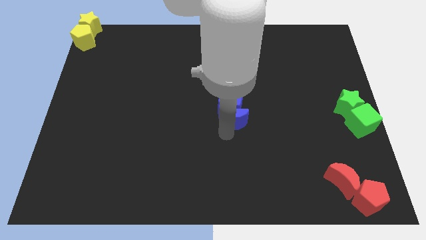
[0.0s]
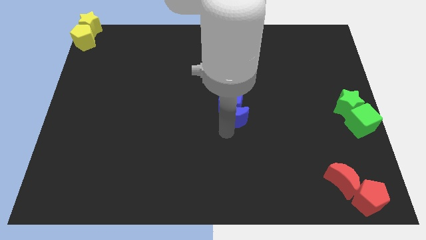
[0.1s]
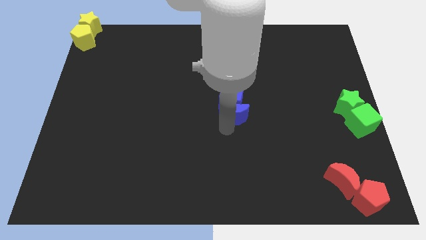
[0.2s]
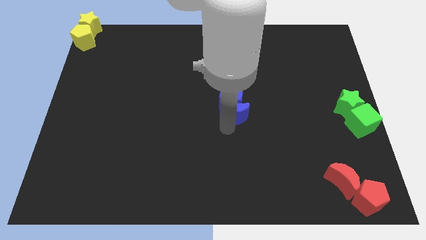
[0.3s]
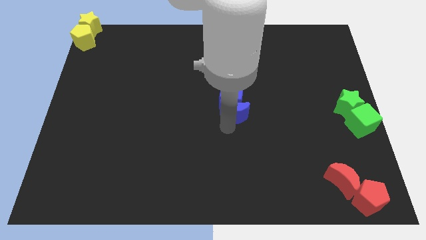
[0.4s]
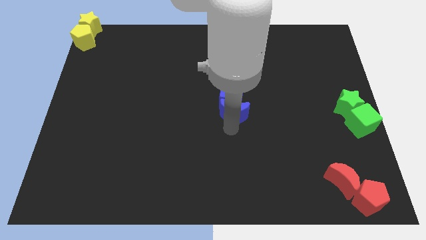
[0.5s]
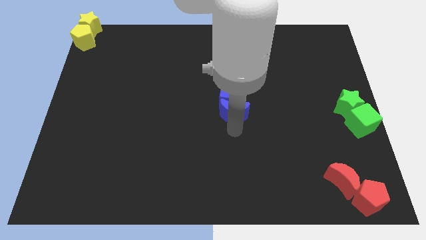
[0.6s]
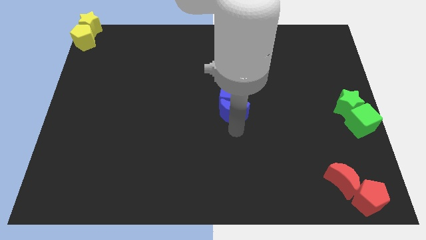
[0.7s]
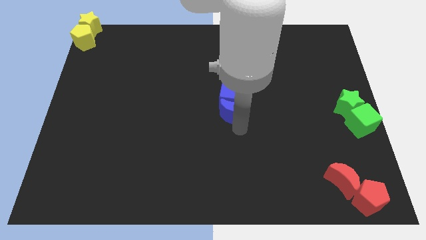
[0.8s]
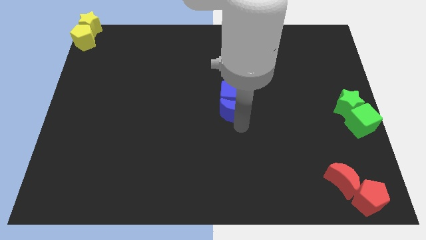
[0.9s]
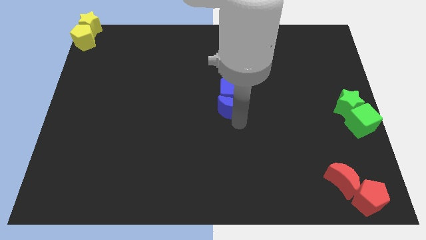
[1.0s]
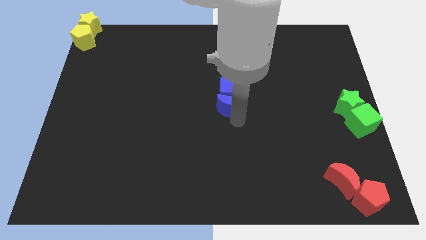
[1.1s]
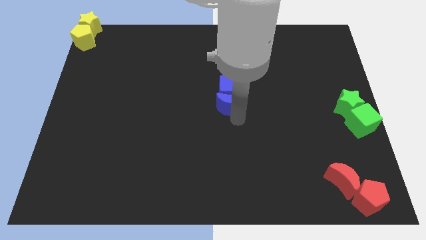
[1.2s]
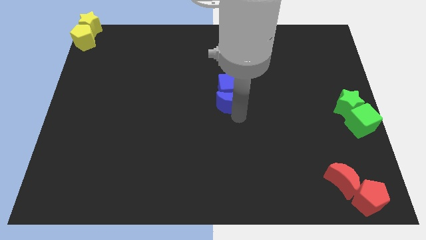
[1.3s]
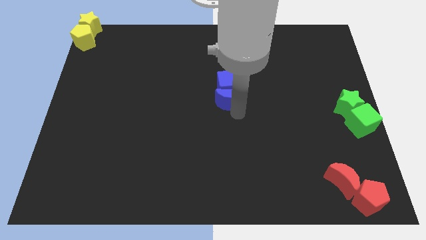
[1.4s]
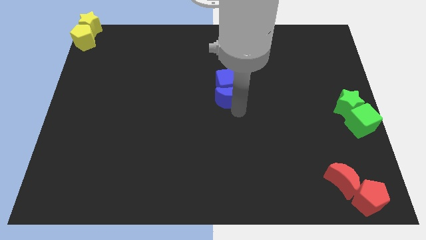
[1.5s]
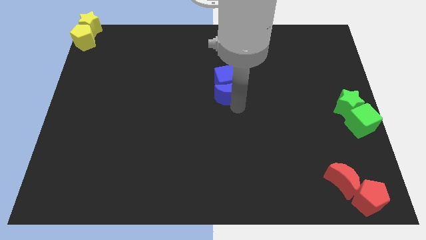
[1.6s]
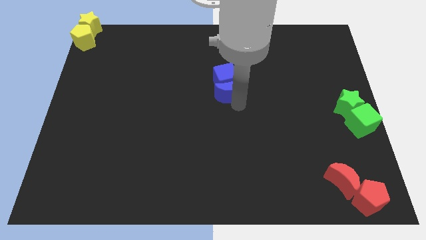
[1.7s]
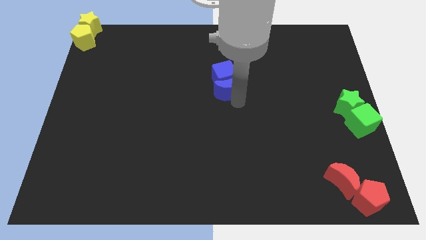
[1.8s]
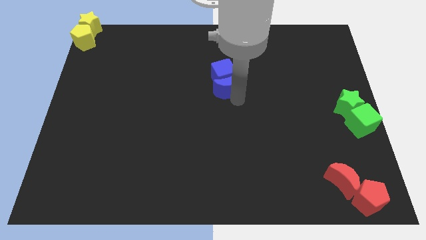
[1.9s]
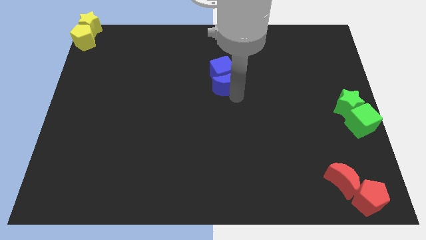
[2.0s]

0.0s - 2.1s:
push blue crescent slightly toward up

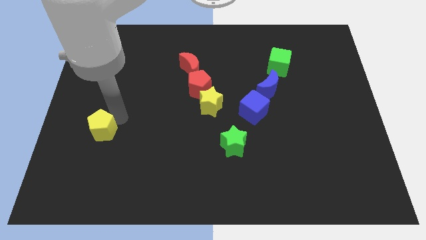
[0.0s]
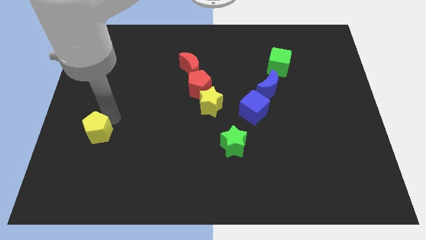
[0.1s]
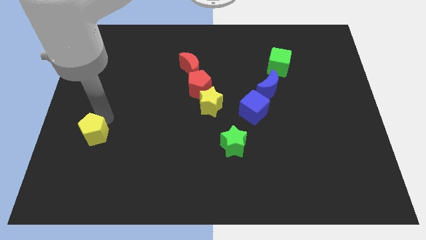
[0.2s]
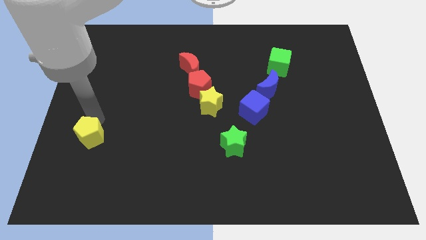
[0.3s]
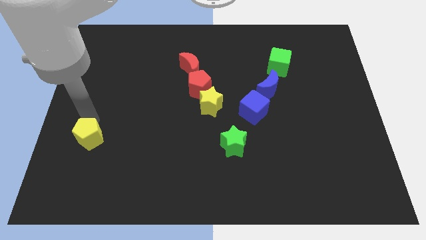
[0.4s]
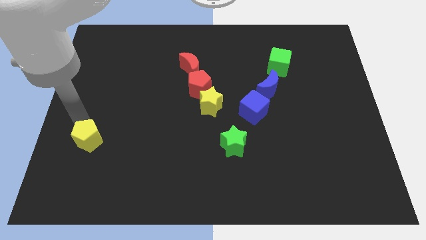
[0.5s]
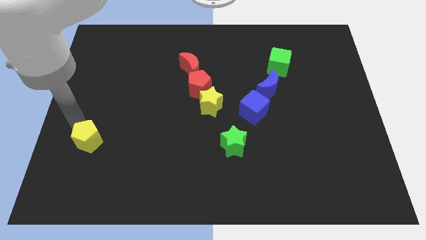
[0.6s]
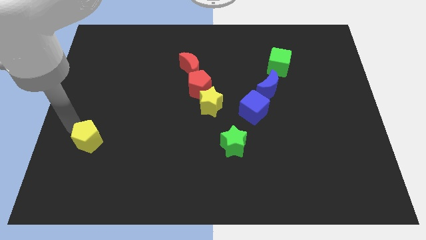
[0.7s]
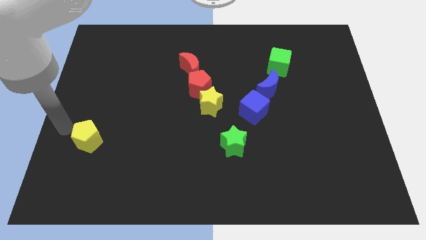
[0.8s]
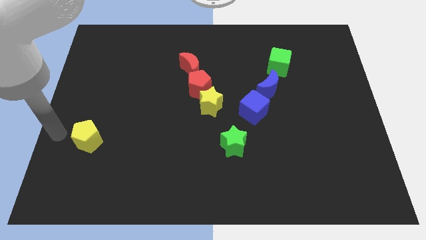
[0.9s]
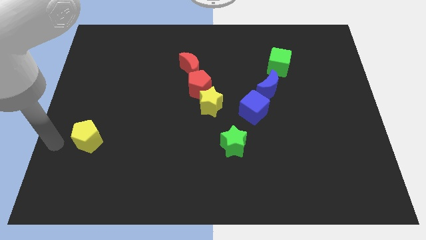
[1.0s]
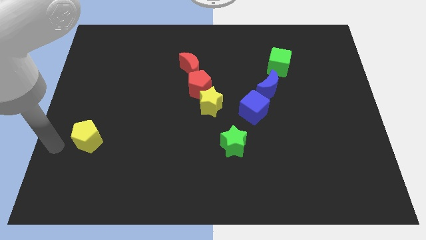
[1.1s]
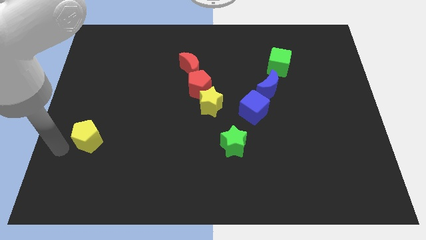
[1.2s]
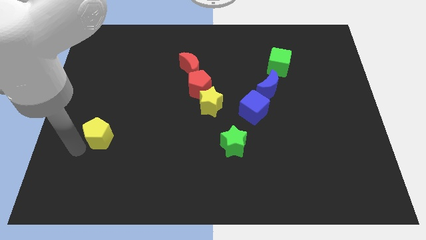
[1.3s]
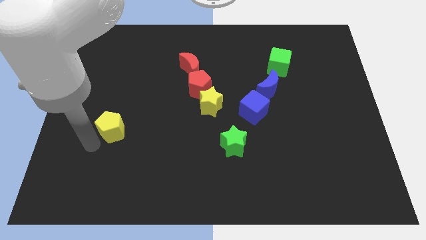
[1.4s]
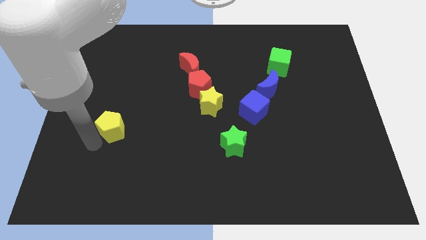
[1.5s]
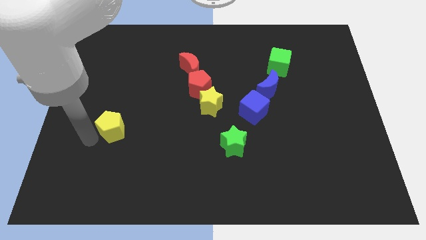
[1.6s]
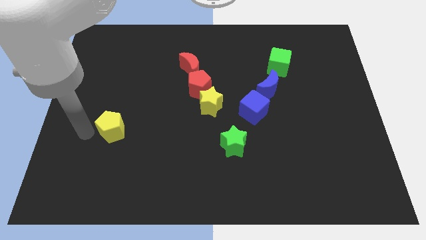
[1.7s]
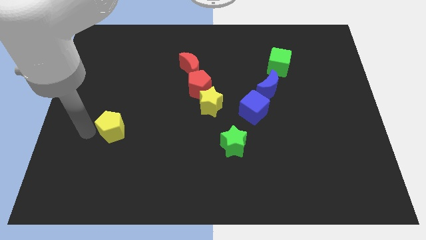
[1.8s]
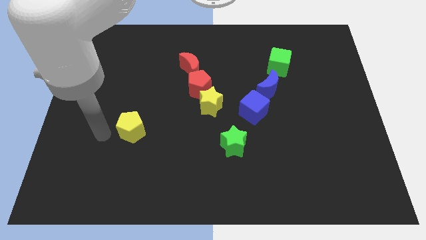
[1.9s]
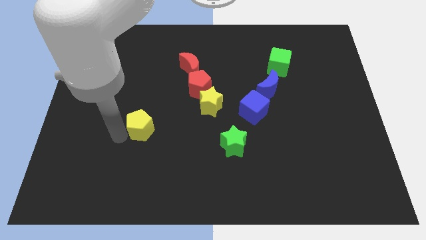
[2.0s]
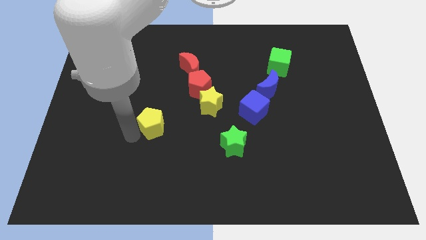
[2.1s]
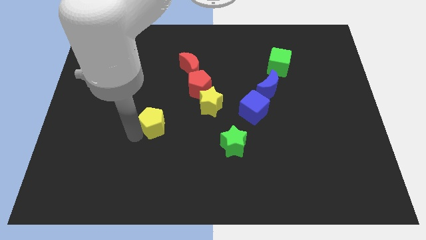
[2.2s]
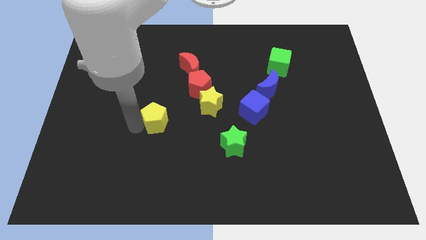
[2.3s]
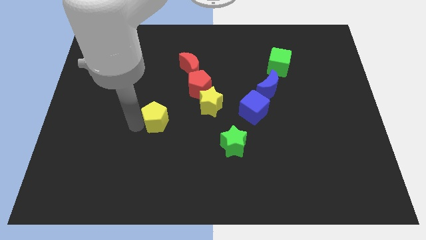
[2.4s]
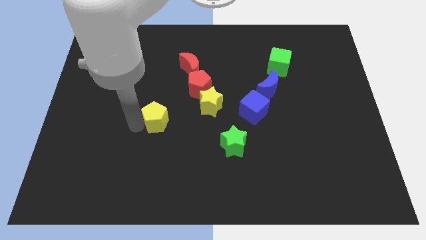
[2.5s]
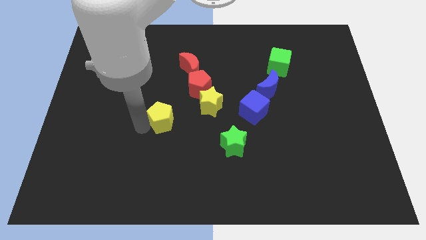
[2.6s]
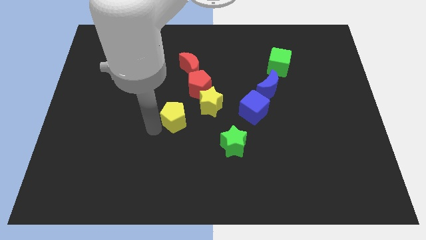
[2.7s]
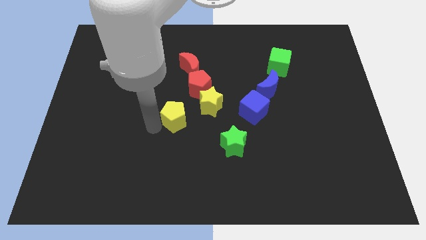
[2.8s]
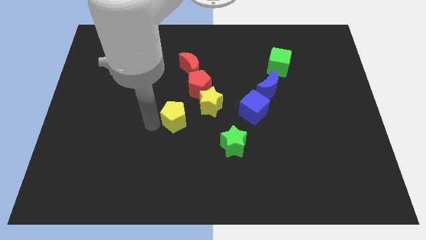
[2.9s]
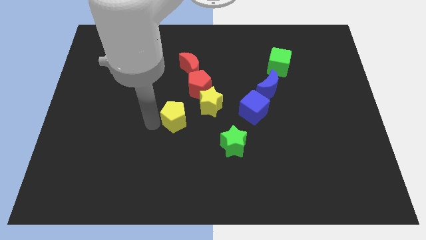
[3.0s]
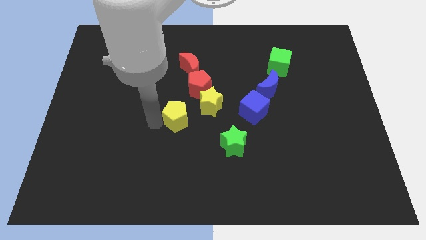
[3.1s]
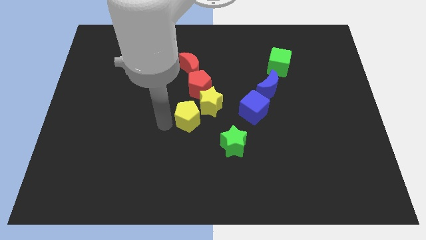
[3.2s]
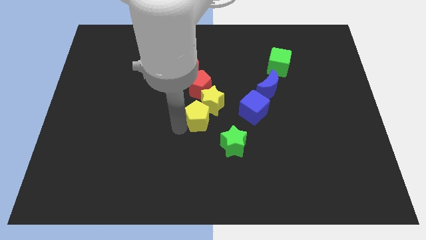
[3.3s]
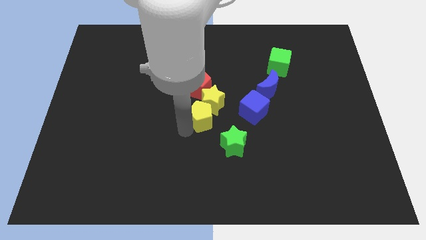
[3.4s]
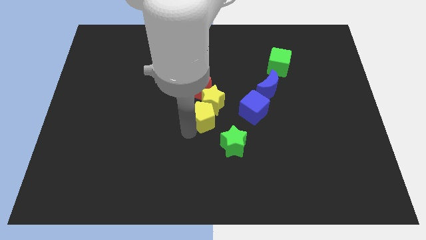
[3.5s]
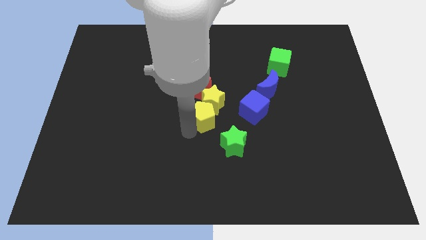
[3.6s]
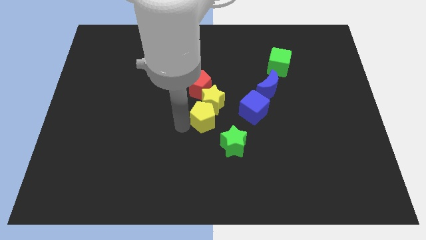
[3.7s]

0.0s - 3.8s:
place yellow pentagon to the bottom left of the yellow star

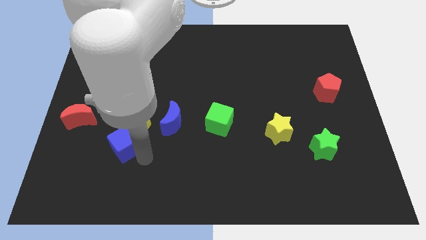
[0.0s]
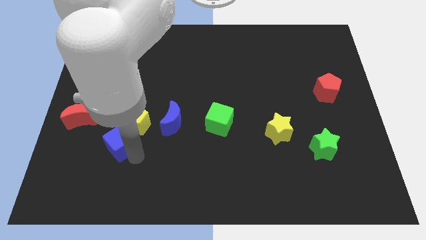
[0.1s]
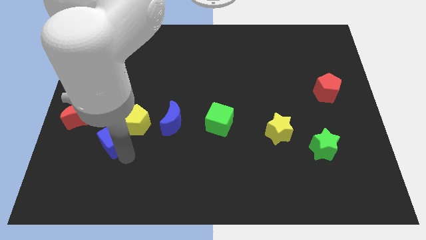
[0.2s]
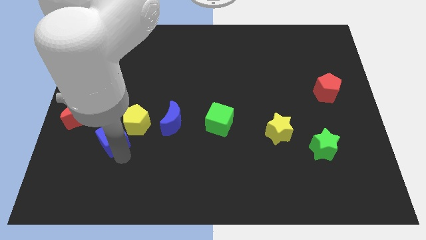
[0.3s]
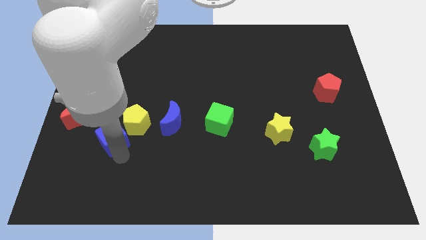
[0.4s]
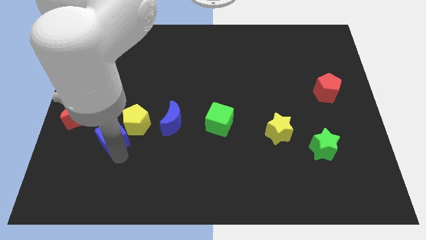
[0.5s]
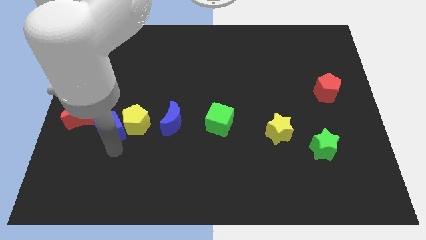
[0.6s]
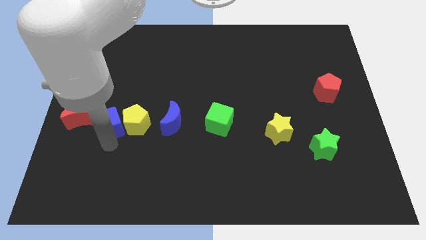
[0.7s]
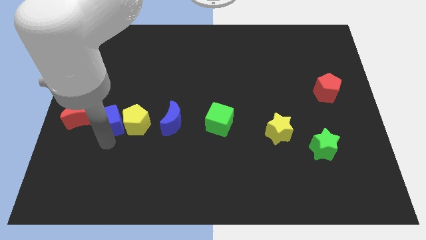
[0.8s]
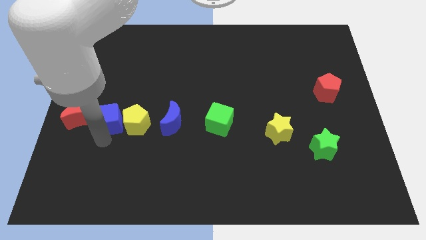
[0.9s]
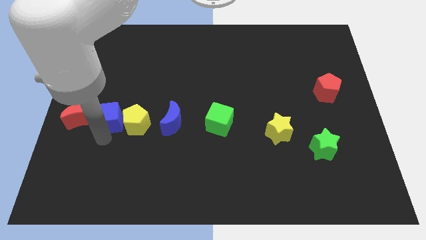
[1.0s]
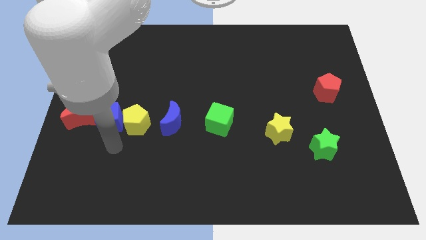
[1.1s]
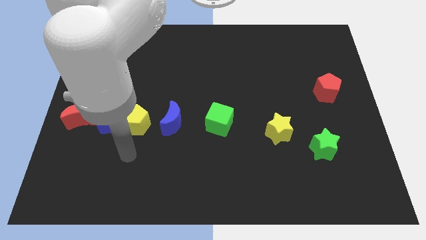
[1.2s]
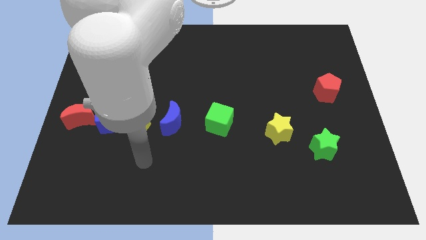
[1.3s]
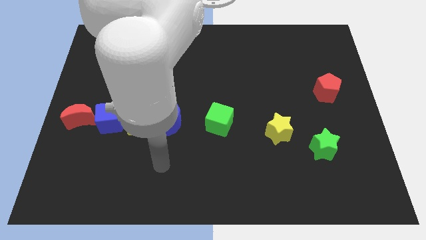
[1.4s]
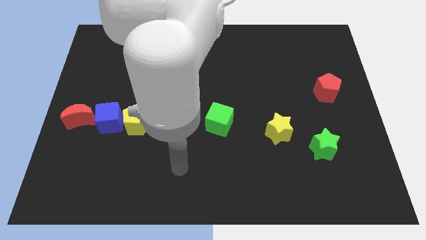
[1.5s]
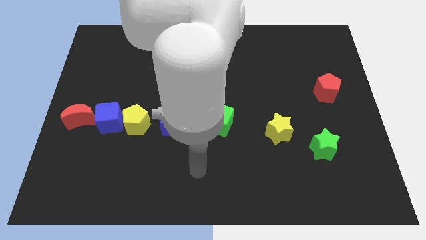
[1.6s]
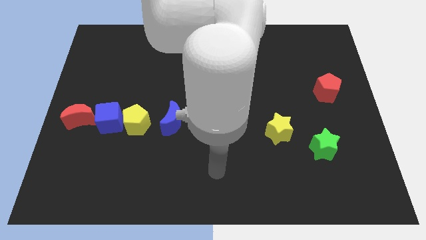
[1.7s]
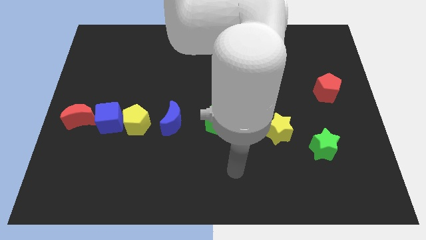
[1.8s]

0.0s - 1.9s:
push the blue cube in between the yellow pentagon and red crescent

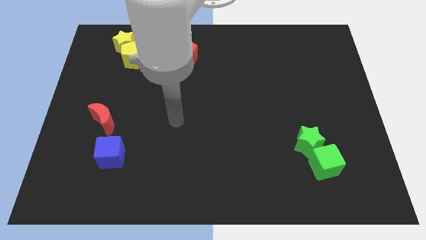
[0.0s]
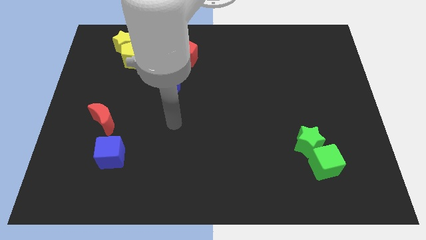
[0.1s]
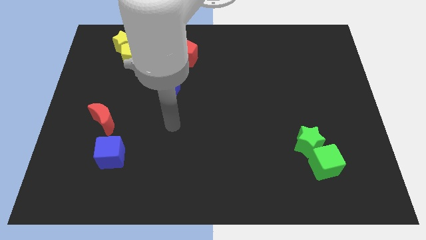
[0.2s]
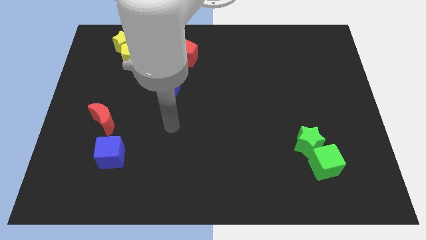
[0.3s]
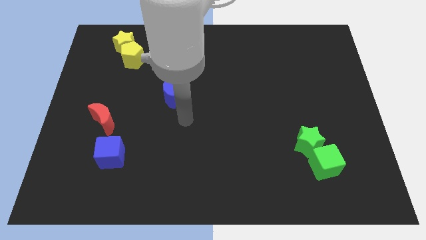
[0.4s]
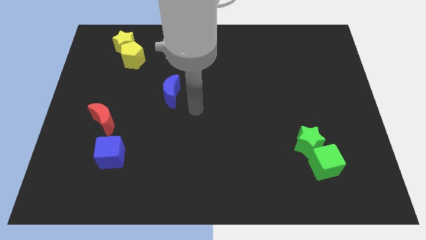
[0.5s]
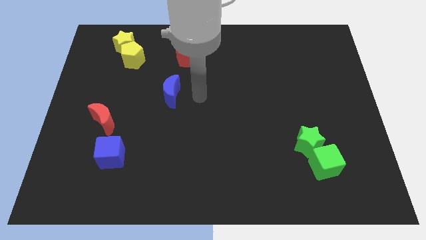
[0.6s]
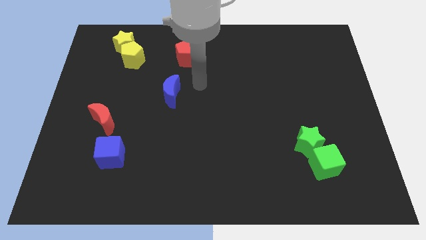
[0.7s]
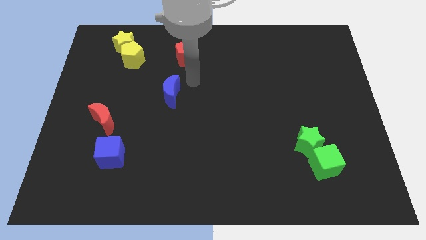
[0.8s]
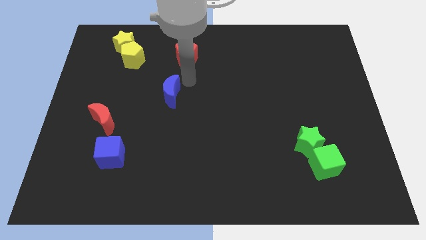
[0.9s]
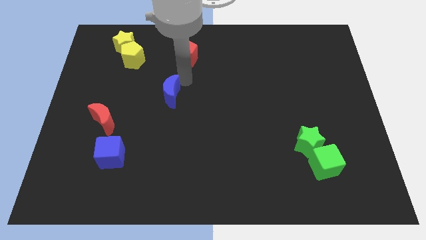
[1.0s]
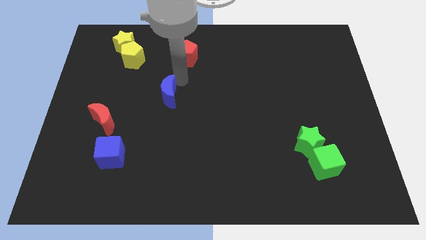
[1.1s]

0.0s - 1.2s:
point your arm at the top of the blue crescent
